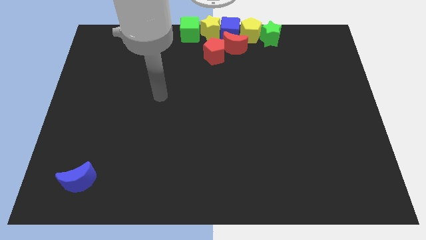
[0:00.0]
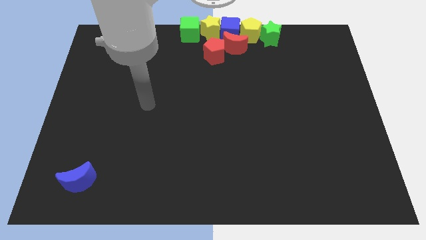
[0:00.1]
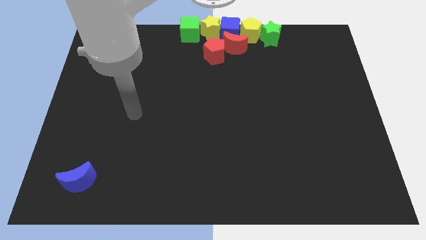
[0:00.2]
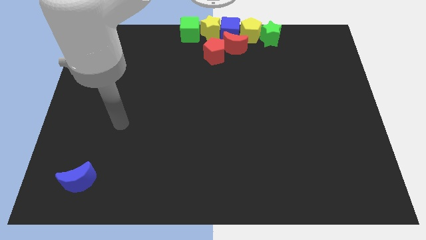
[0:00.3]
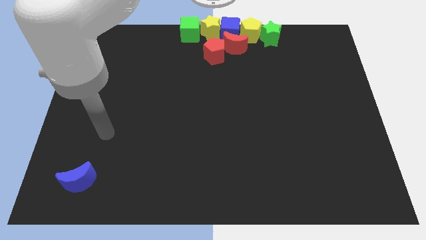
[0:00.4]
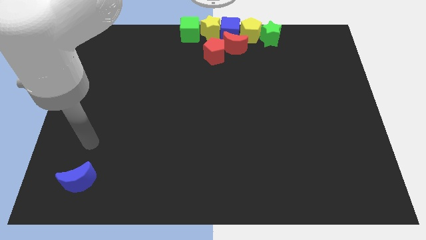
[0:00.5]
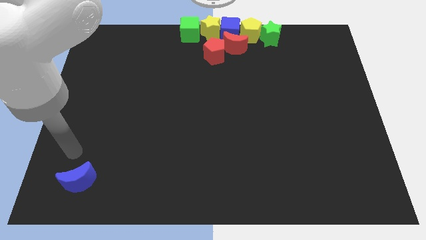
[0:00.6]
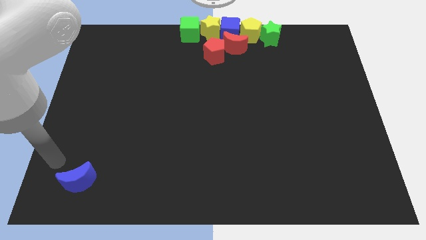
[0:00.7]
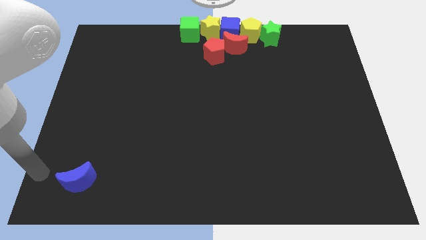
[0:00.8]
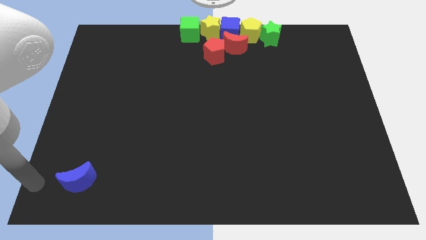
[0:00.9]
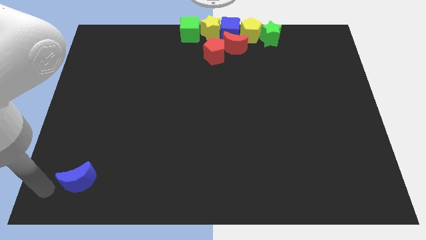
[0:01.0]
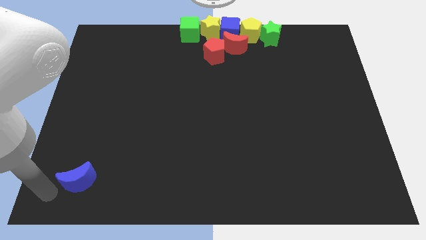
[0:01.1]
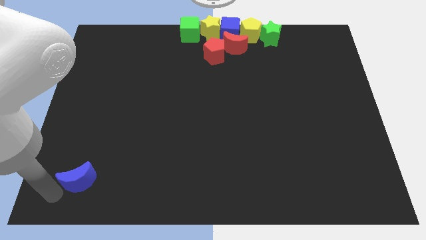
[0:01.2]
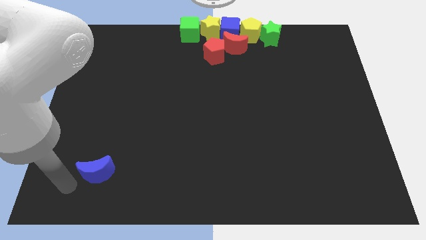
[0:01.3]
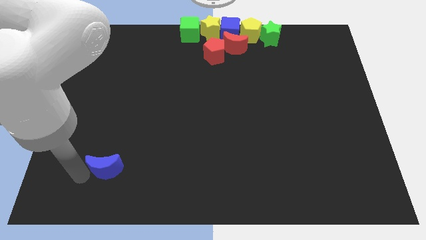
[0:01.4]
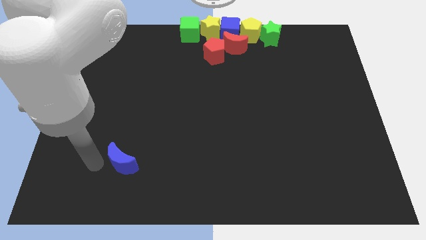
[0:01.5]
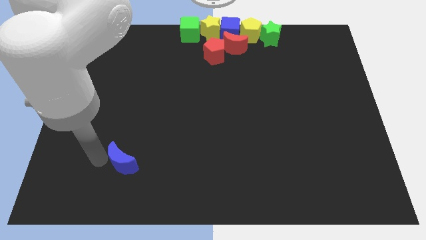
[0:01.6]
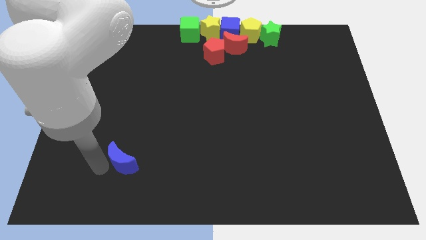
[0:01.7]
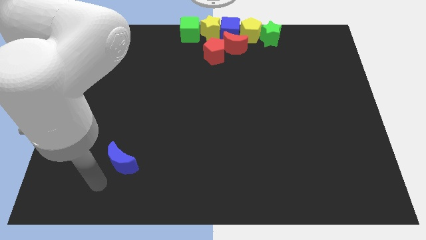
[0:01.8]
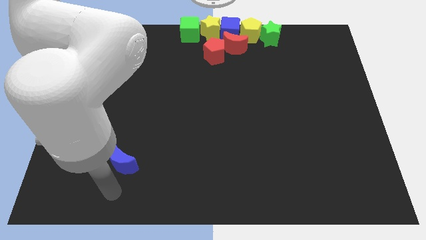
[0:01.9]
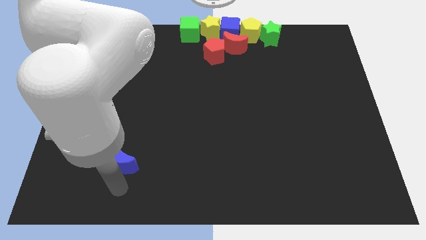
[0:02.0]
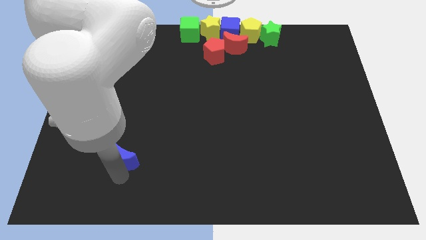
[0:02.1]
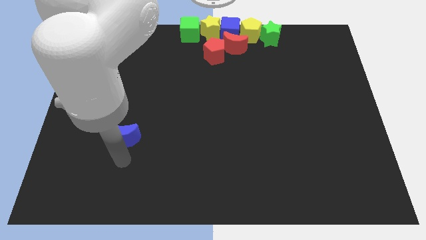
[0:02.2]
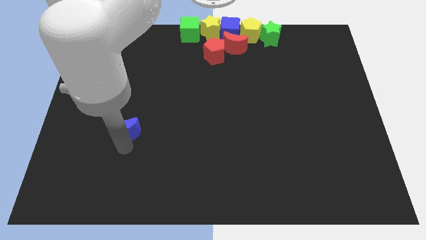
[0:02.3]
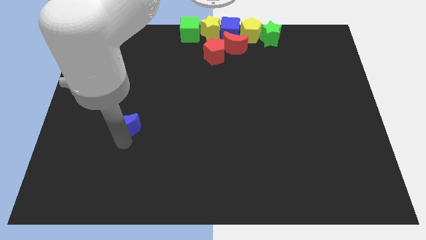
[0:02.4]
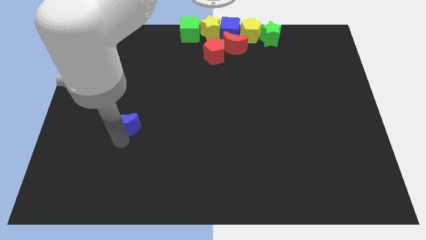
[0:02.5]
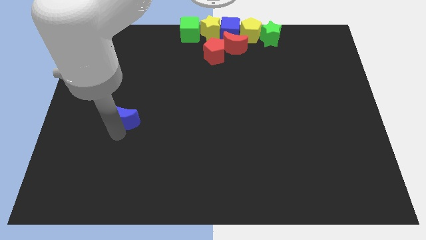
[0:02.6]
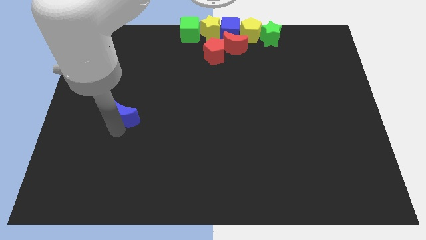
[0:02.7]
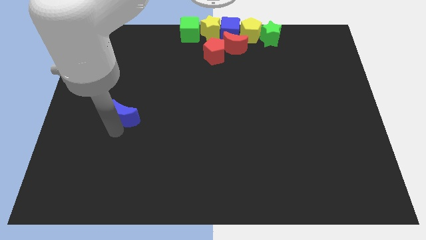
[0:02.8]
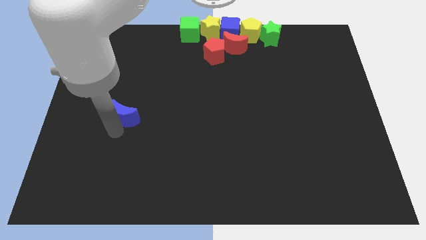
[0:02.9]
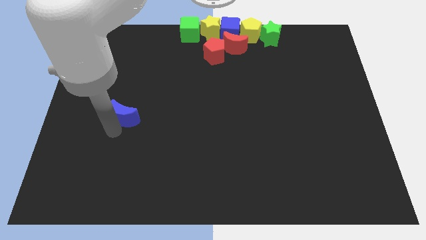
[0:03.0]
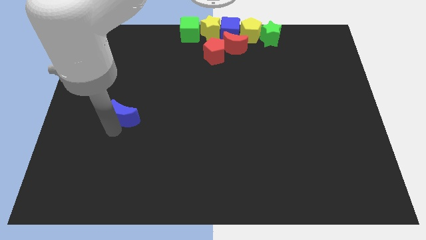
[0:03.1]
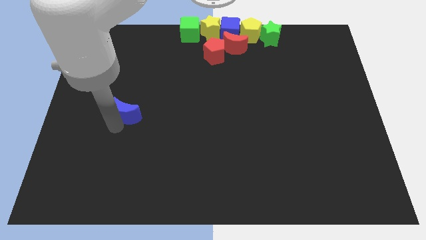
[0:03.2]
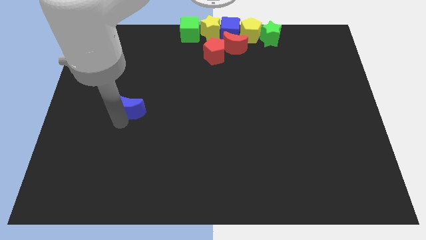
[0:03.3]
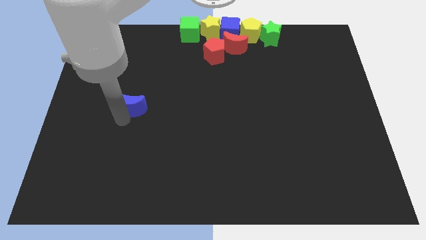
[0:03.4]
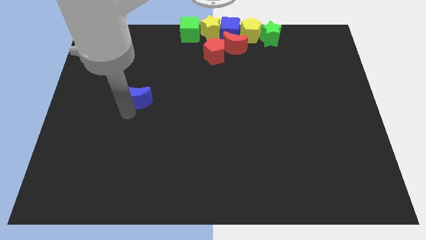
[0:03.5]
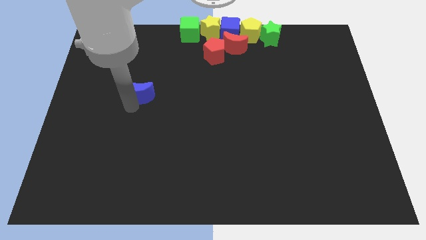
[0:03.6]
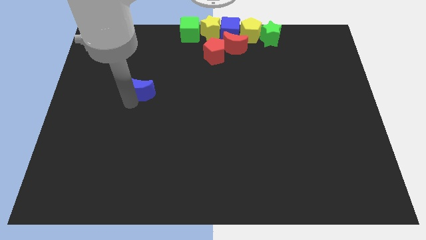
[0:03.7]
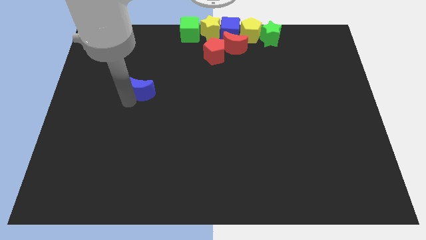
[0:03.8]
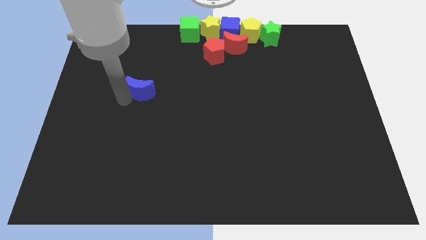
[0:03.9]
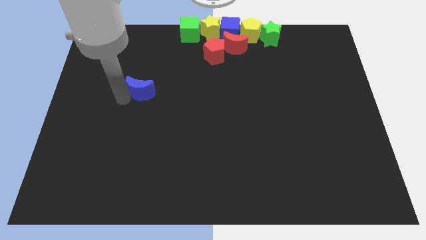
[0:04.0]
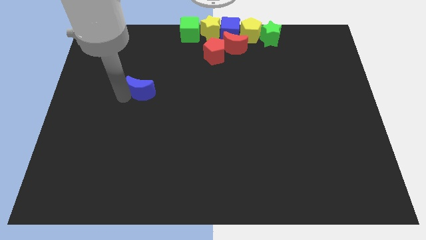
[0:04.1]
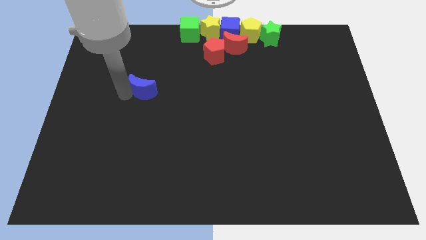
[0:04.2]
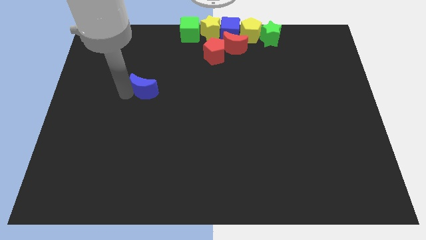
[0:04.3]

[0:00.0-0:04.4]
push the blue crescent to the top of the board

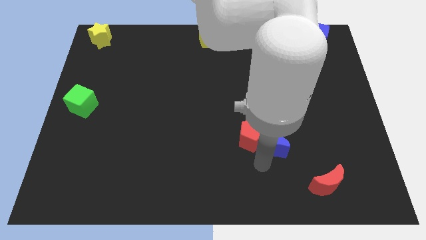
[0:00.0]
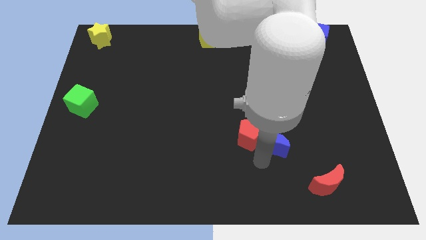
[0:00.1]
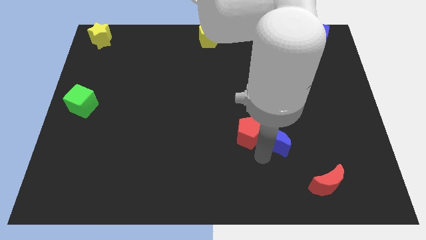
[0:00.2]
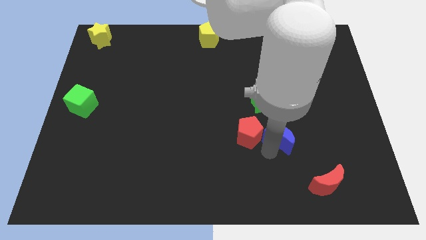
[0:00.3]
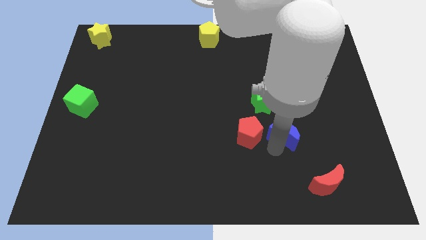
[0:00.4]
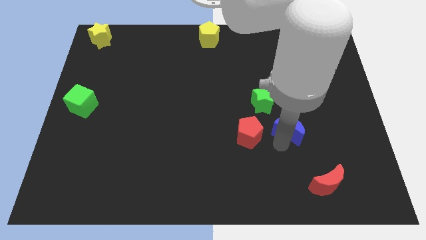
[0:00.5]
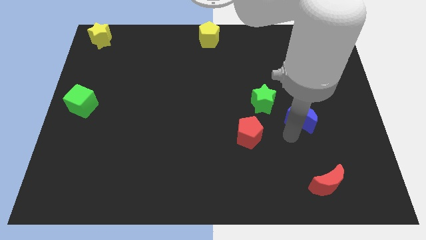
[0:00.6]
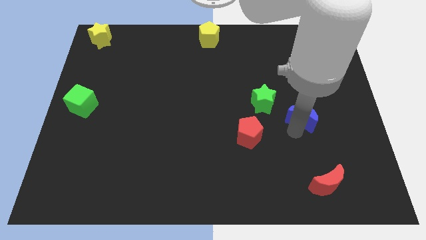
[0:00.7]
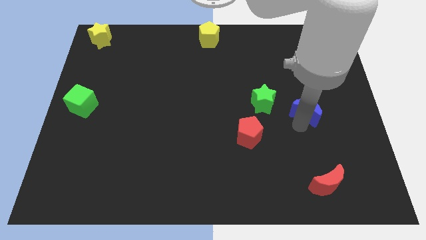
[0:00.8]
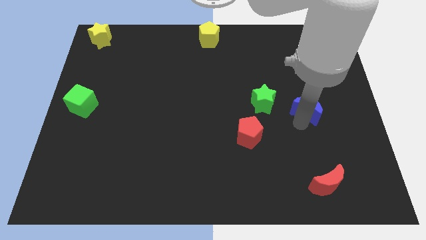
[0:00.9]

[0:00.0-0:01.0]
separate the red pentagon and blue moon

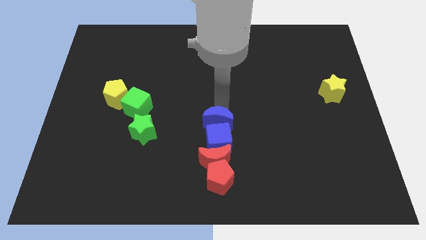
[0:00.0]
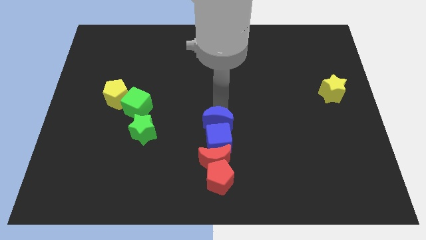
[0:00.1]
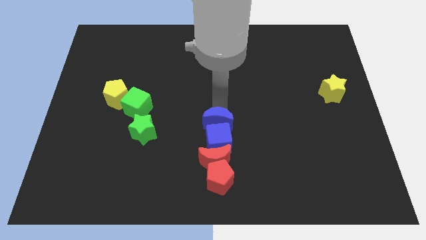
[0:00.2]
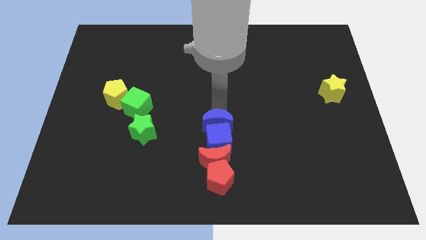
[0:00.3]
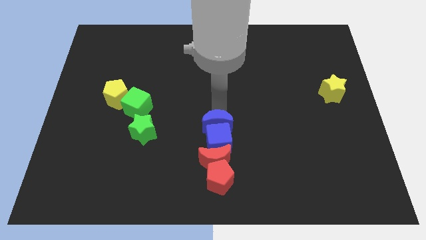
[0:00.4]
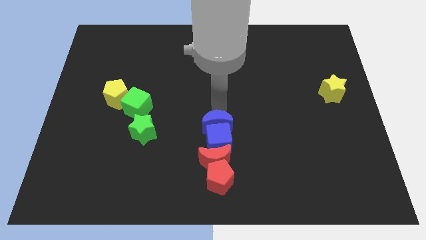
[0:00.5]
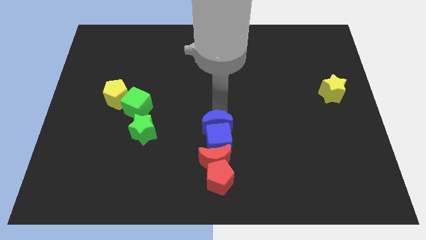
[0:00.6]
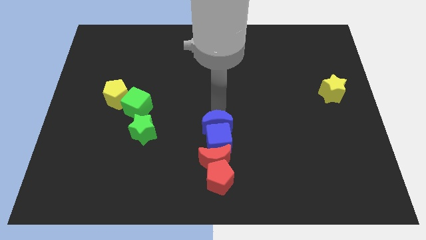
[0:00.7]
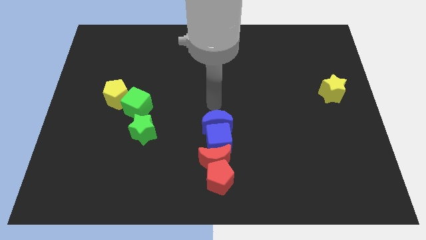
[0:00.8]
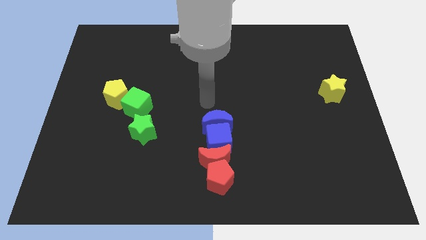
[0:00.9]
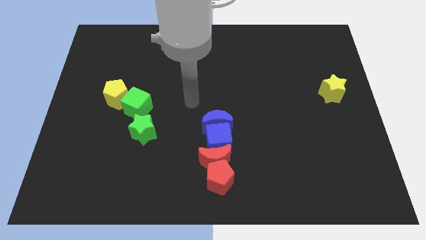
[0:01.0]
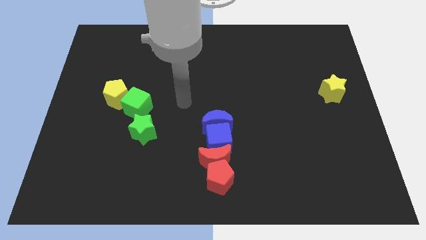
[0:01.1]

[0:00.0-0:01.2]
push the blue crescent into the blue cube

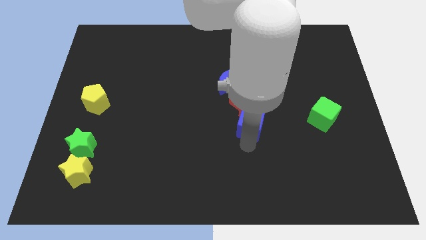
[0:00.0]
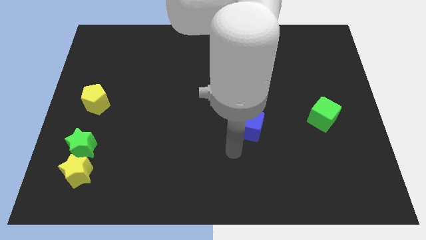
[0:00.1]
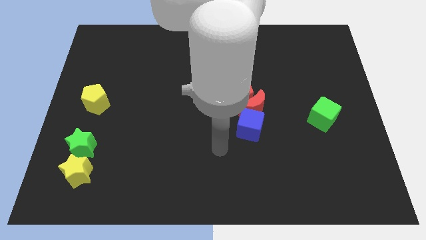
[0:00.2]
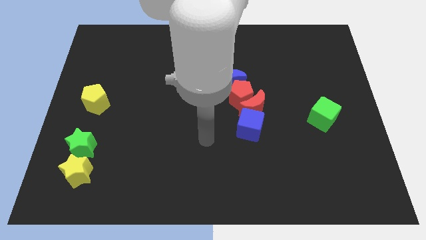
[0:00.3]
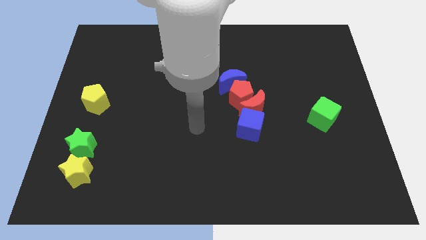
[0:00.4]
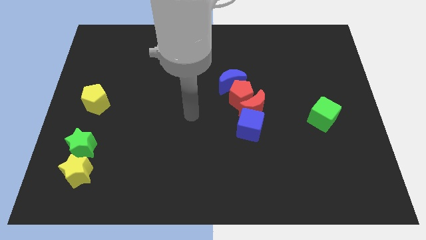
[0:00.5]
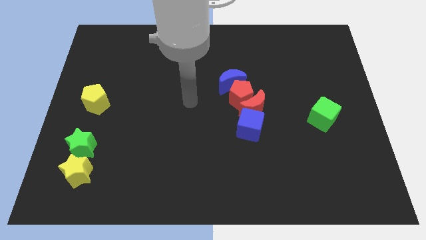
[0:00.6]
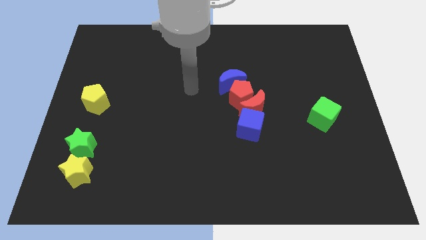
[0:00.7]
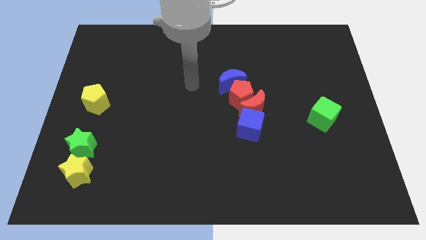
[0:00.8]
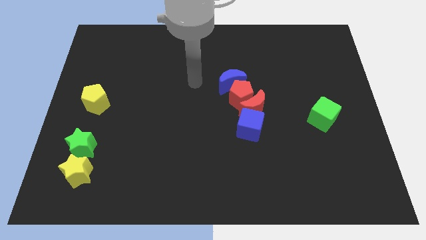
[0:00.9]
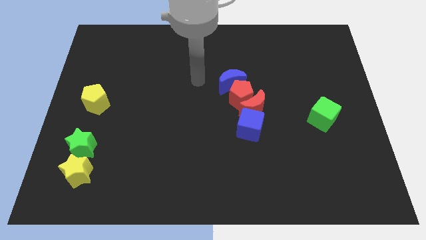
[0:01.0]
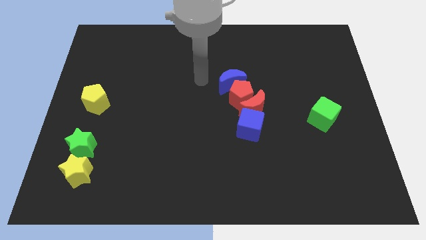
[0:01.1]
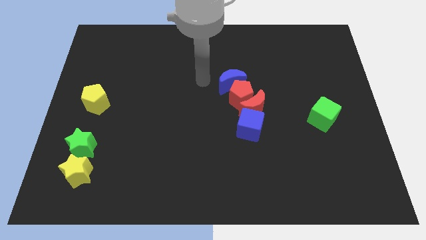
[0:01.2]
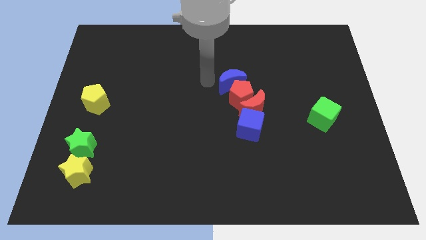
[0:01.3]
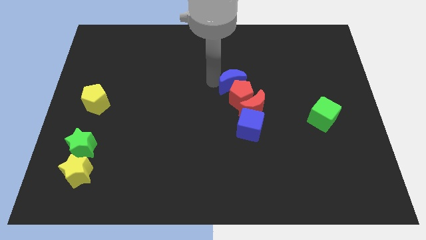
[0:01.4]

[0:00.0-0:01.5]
point your arm at the left of the blue crescent

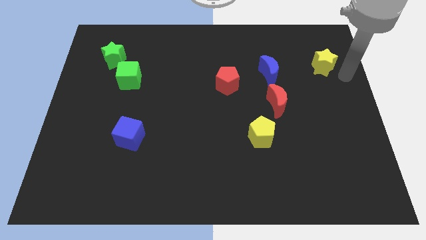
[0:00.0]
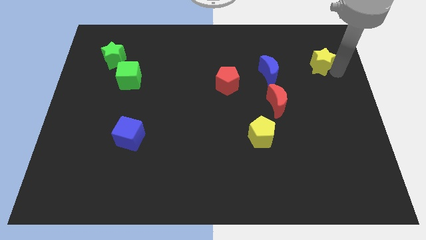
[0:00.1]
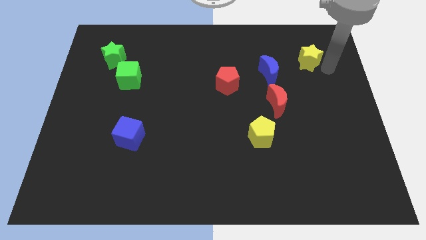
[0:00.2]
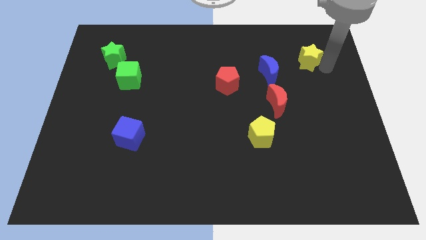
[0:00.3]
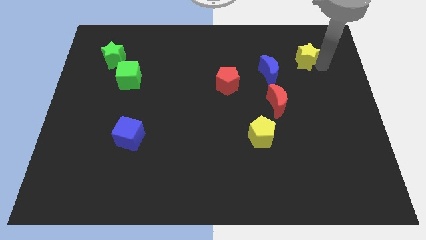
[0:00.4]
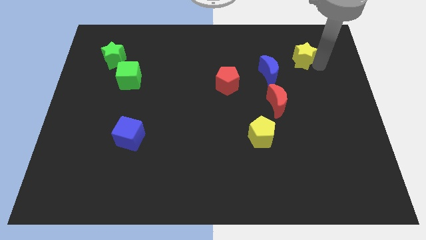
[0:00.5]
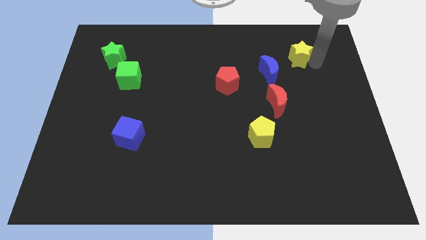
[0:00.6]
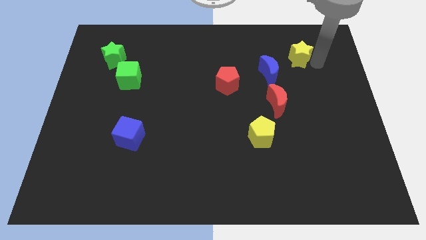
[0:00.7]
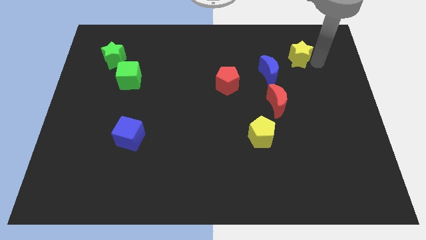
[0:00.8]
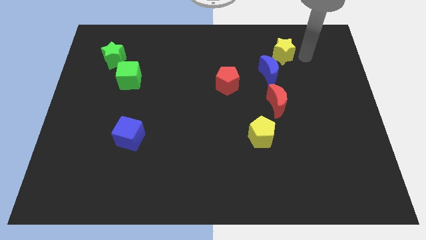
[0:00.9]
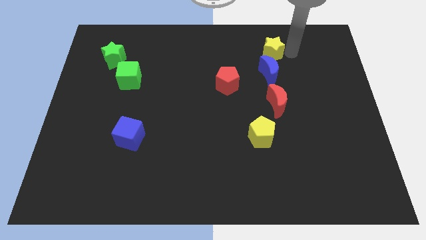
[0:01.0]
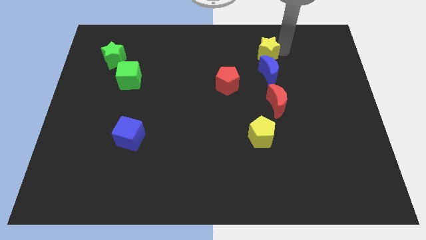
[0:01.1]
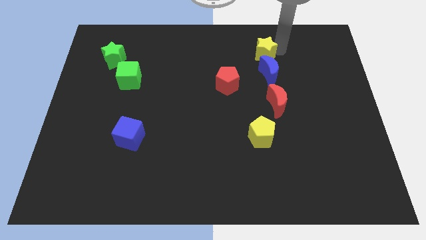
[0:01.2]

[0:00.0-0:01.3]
move the yellow star above the blue crescent
